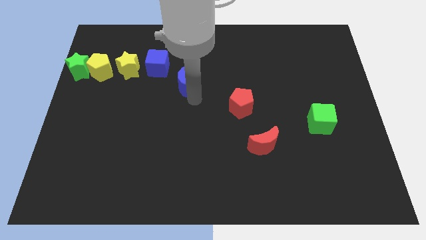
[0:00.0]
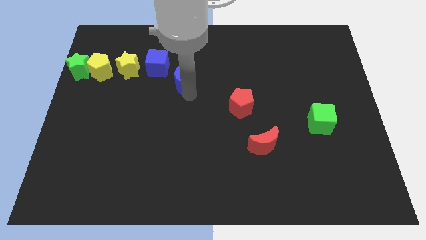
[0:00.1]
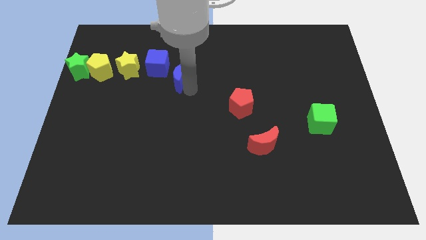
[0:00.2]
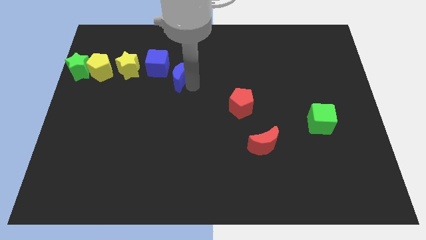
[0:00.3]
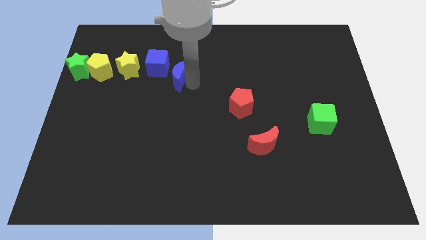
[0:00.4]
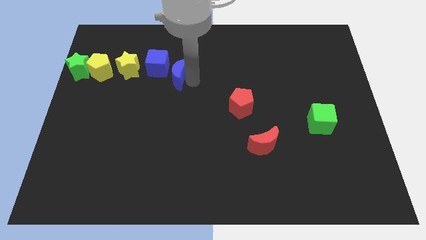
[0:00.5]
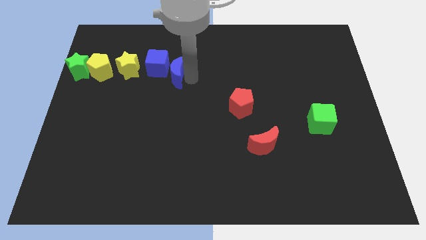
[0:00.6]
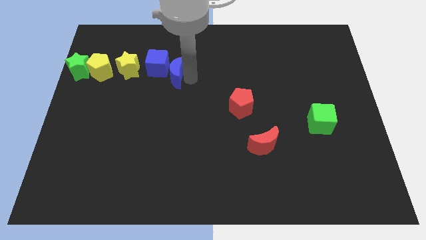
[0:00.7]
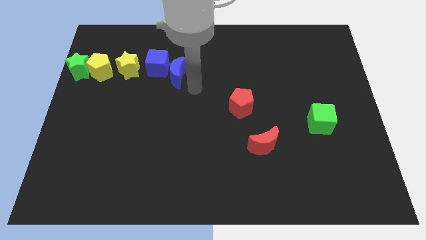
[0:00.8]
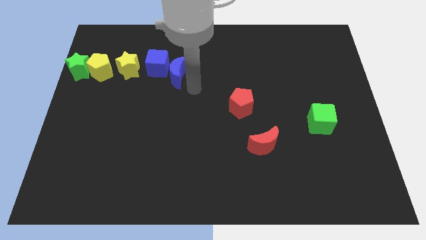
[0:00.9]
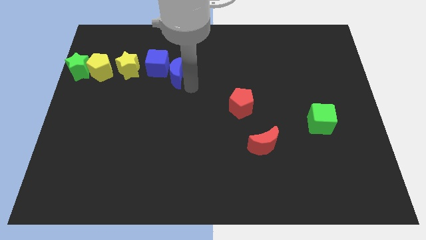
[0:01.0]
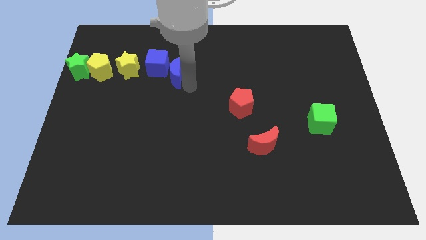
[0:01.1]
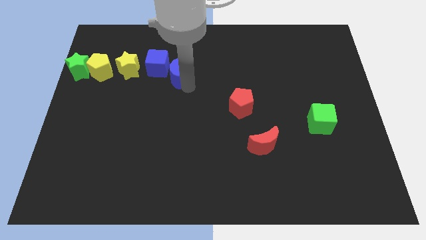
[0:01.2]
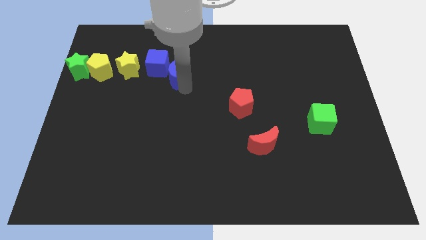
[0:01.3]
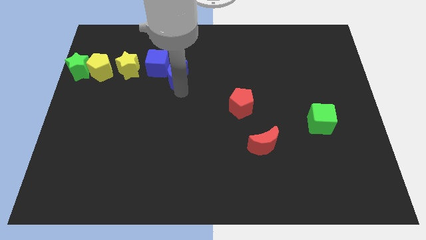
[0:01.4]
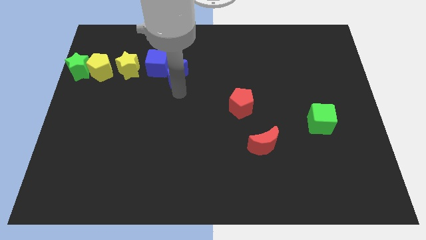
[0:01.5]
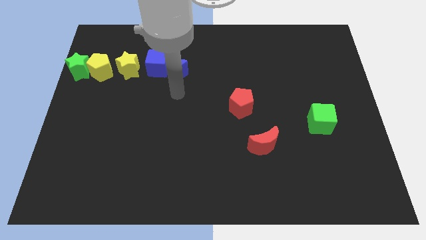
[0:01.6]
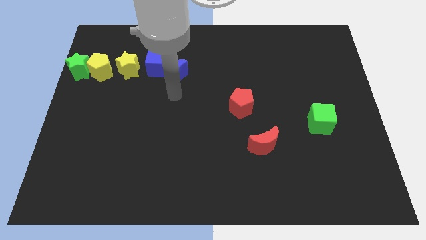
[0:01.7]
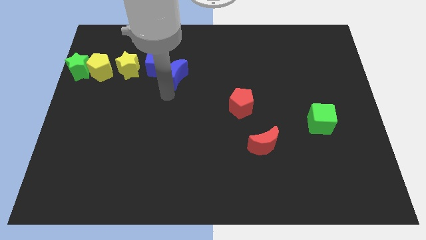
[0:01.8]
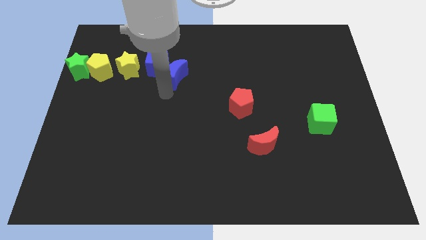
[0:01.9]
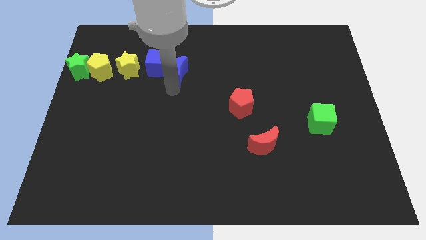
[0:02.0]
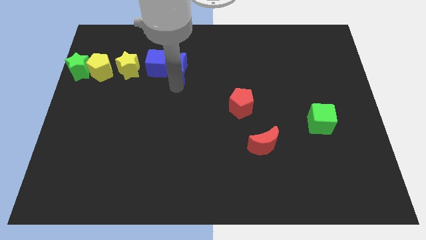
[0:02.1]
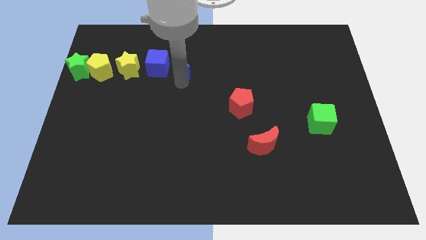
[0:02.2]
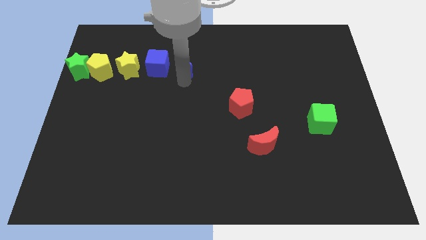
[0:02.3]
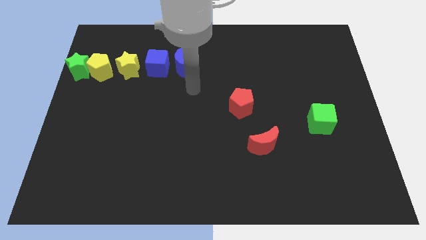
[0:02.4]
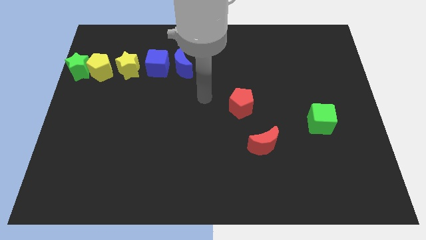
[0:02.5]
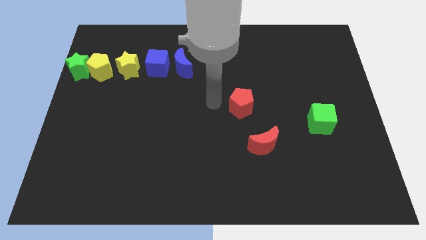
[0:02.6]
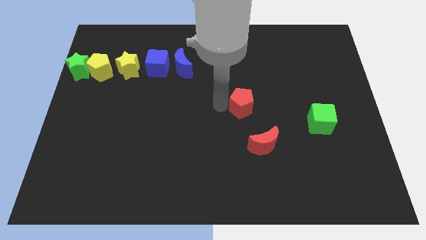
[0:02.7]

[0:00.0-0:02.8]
move the blue moon to the right side of the blue cube

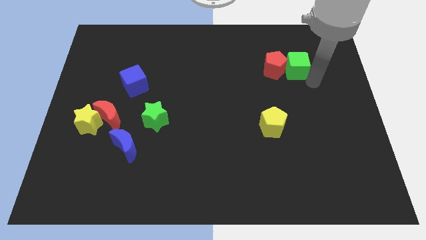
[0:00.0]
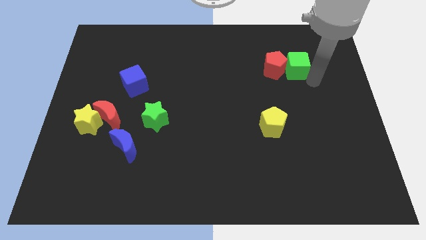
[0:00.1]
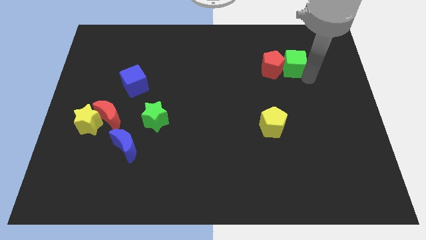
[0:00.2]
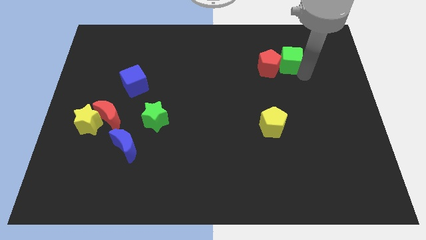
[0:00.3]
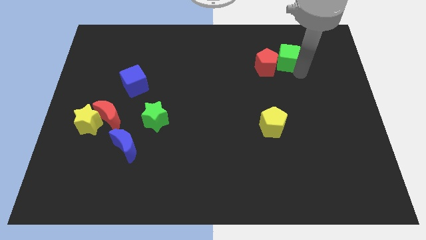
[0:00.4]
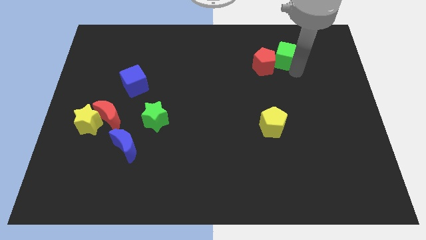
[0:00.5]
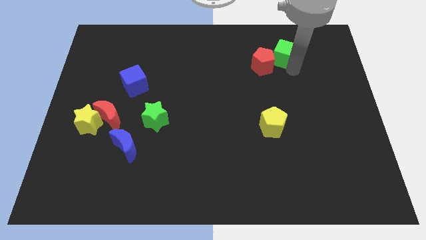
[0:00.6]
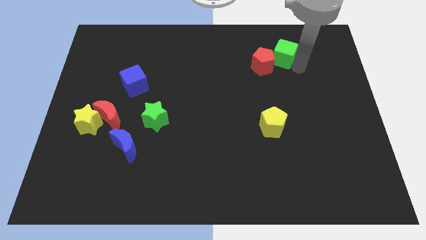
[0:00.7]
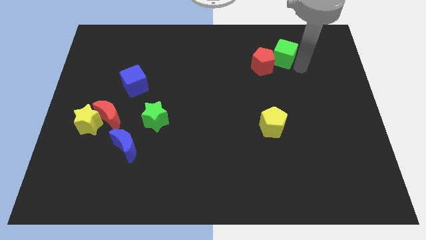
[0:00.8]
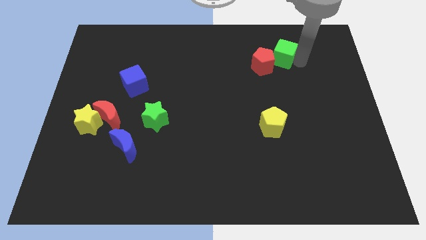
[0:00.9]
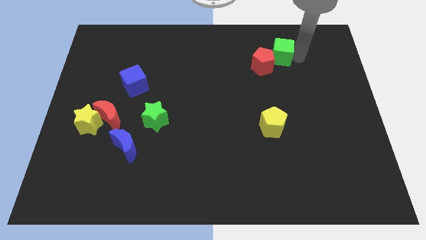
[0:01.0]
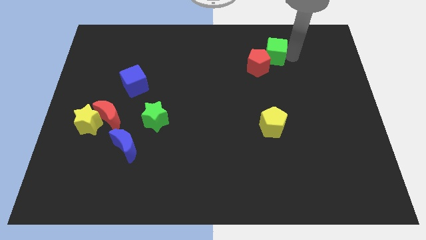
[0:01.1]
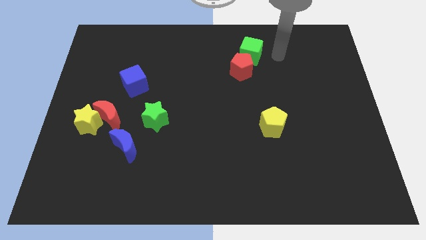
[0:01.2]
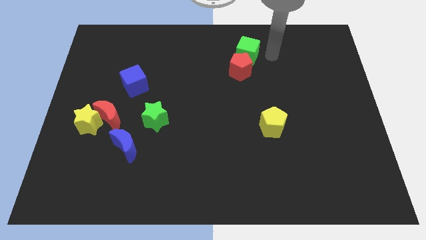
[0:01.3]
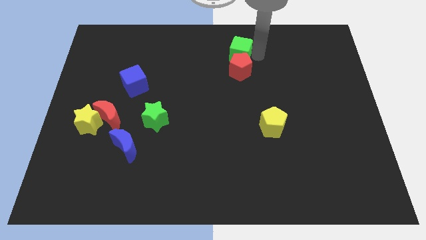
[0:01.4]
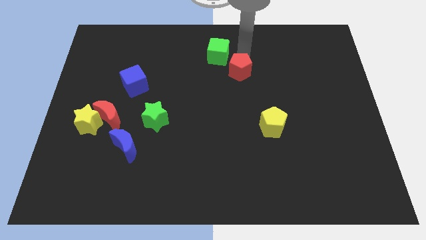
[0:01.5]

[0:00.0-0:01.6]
place the green cube above the red pentagon

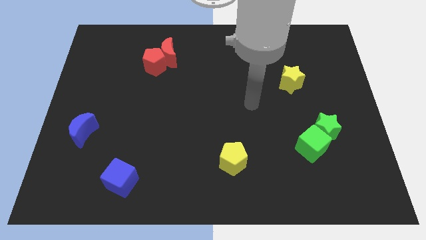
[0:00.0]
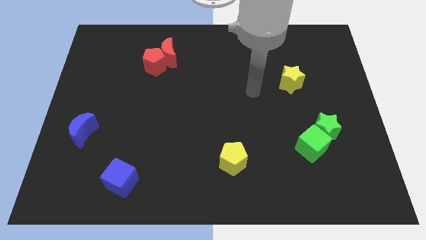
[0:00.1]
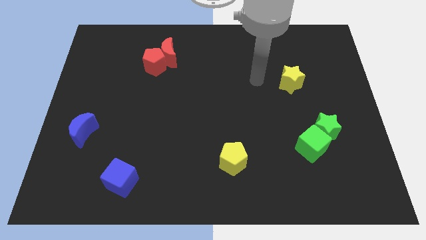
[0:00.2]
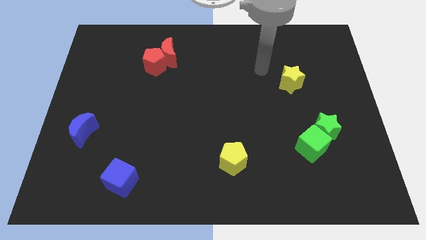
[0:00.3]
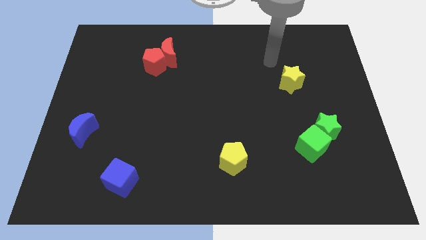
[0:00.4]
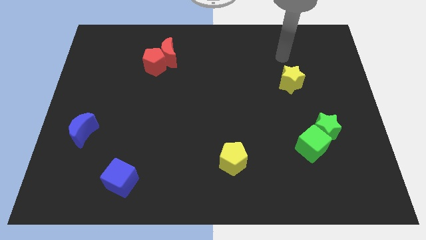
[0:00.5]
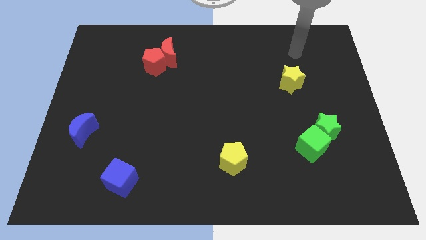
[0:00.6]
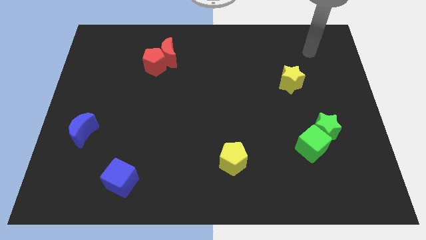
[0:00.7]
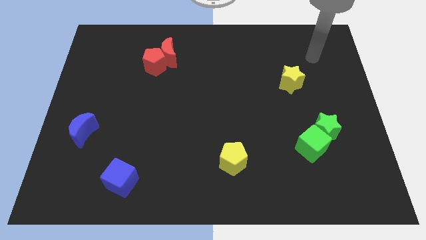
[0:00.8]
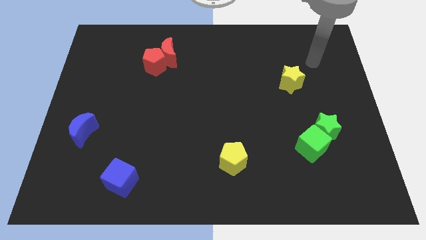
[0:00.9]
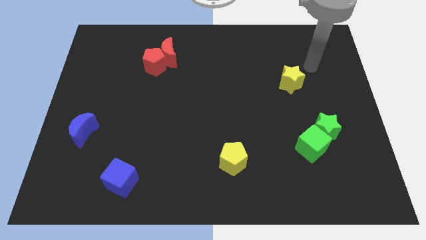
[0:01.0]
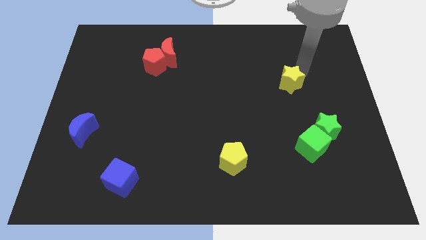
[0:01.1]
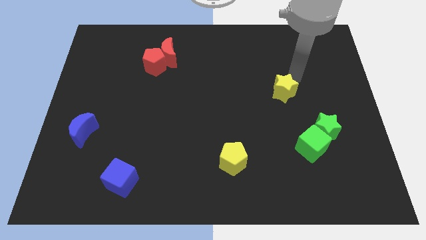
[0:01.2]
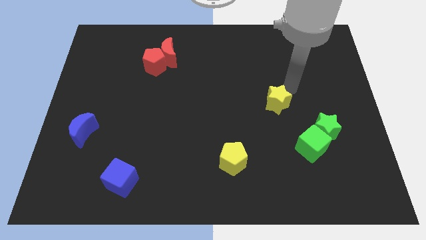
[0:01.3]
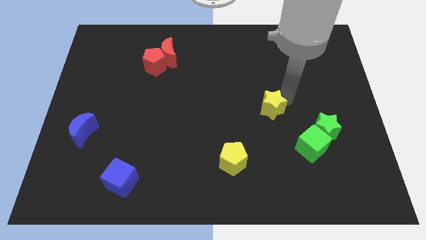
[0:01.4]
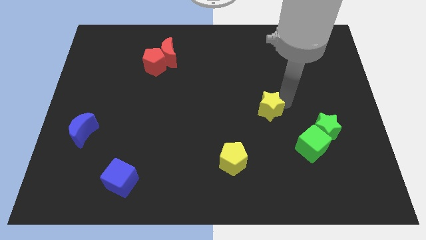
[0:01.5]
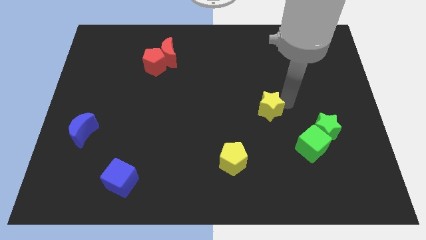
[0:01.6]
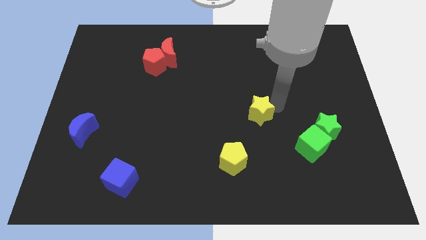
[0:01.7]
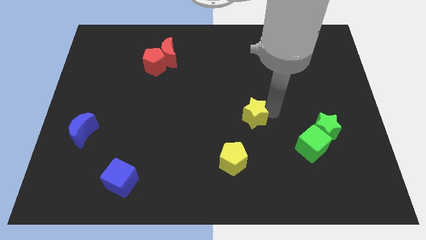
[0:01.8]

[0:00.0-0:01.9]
put the yellow star diagonally on the top right side of the yellow pentagon

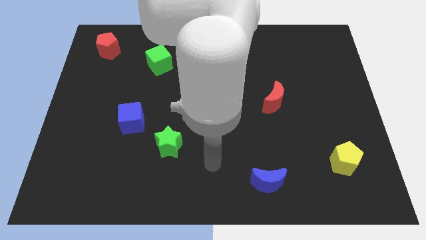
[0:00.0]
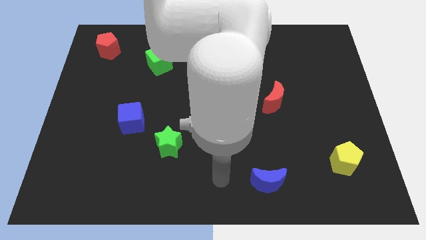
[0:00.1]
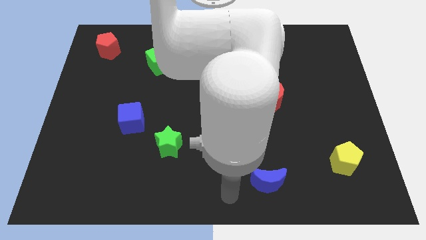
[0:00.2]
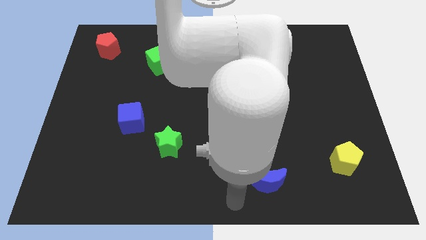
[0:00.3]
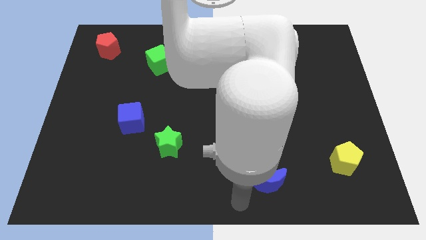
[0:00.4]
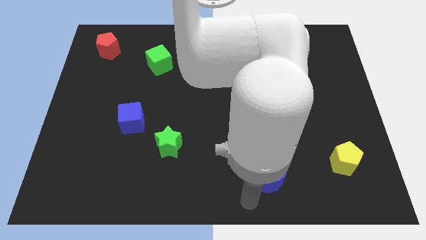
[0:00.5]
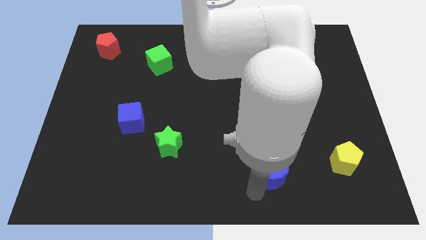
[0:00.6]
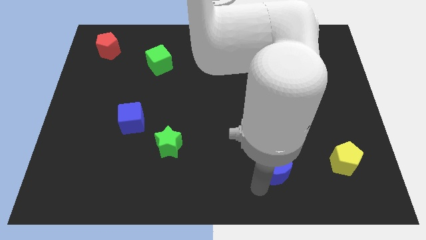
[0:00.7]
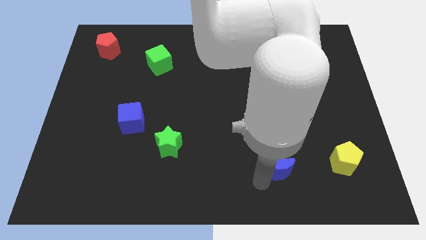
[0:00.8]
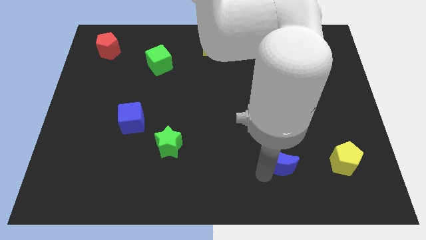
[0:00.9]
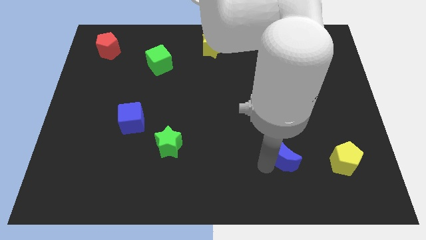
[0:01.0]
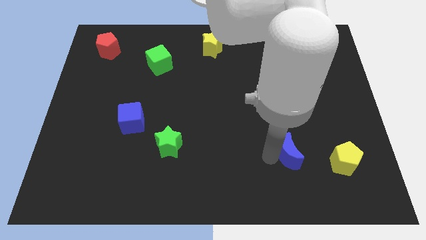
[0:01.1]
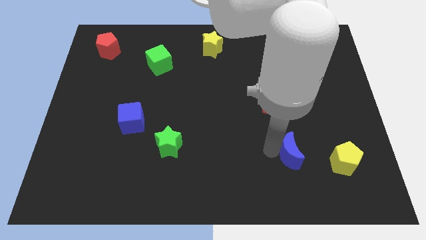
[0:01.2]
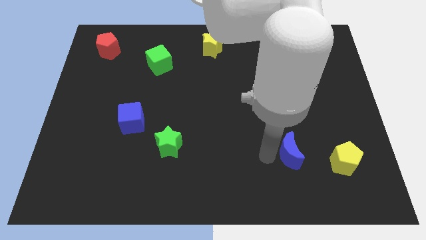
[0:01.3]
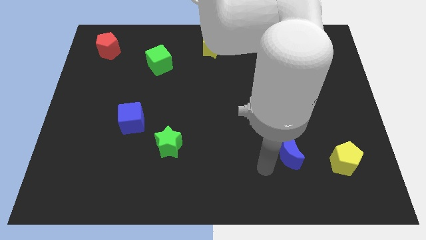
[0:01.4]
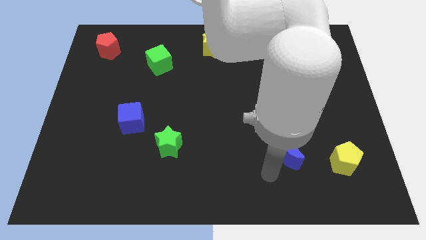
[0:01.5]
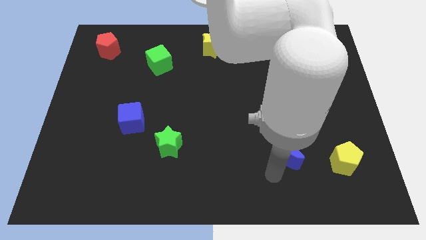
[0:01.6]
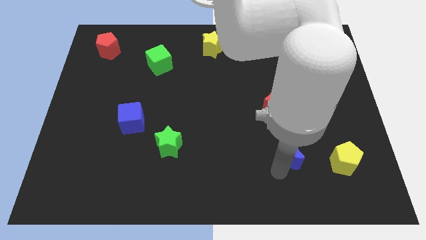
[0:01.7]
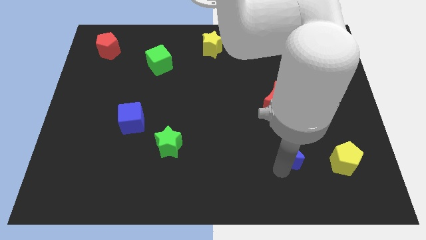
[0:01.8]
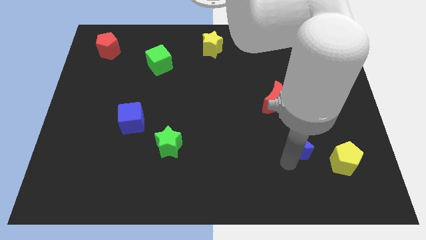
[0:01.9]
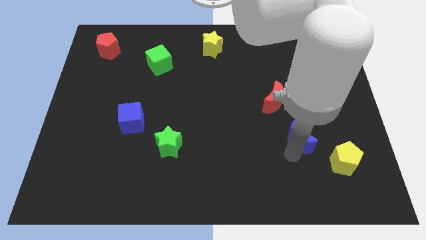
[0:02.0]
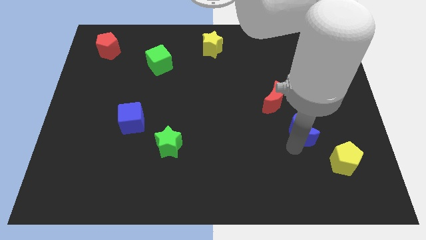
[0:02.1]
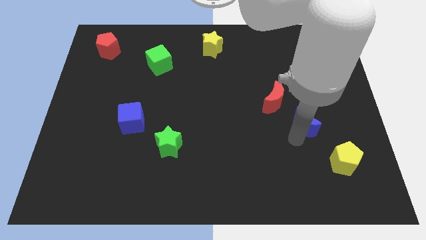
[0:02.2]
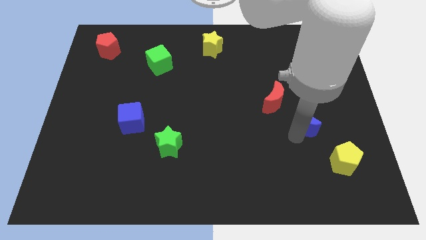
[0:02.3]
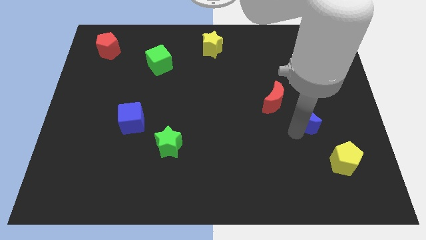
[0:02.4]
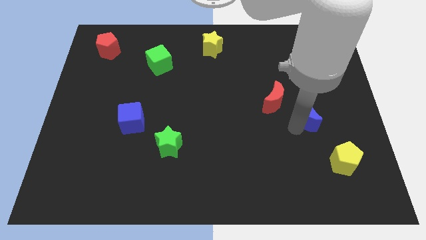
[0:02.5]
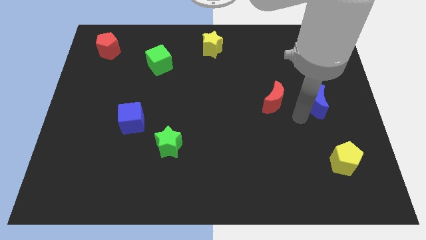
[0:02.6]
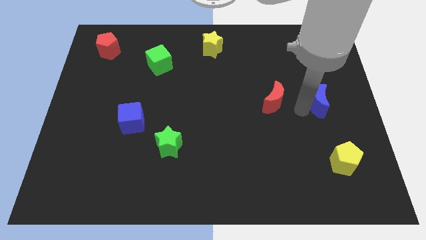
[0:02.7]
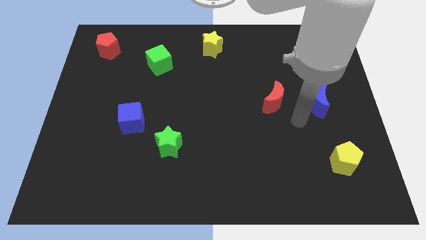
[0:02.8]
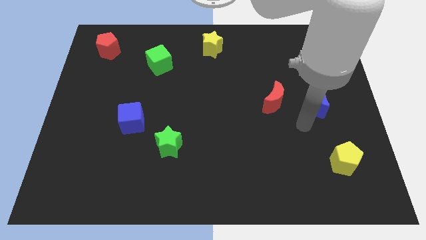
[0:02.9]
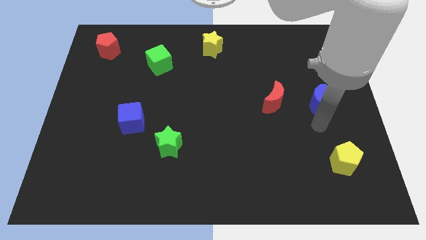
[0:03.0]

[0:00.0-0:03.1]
push blue moon to the right of red moon
